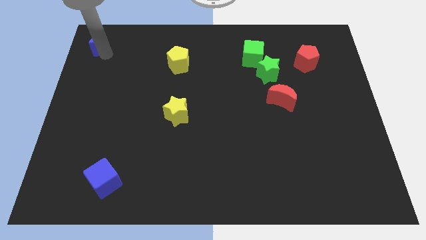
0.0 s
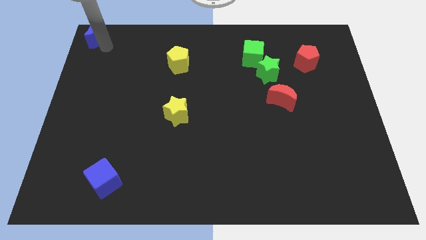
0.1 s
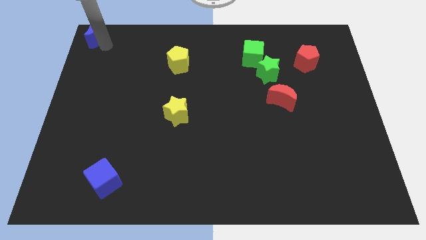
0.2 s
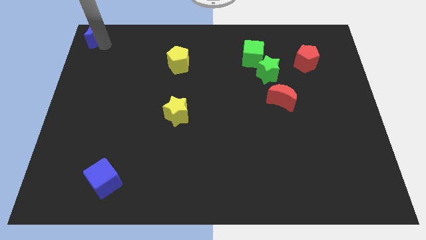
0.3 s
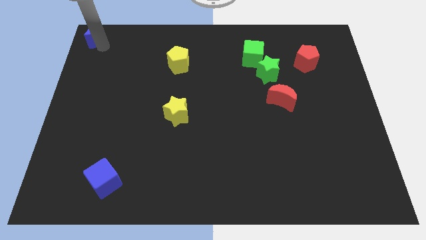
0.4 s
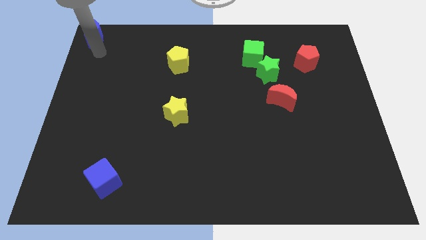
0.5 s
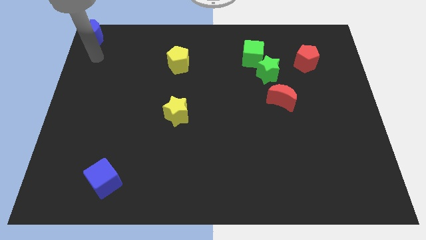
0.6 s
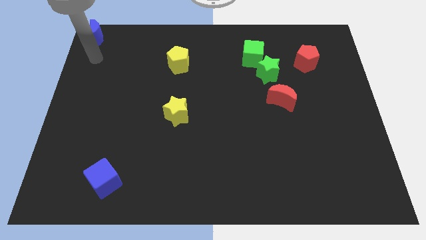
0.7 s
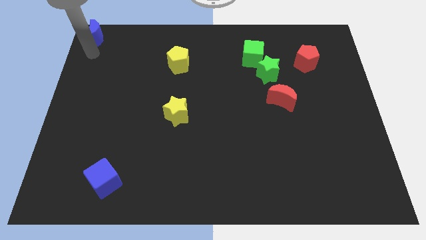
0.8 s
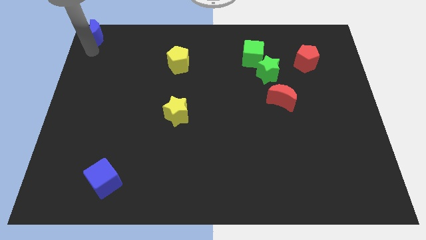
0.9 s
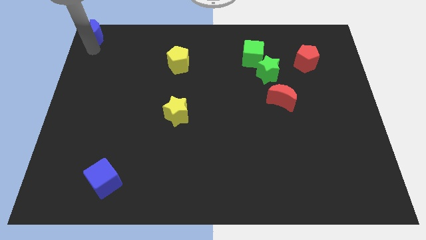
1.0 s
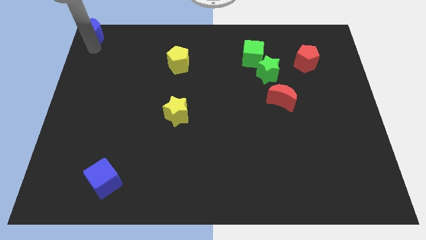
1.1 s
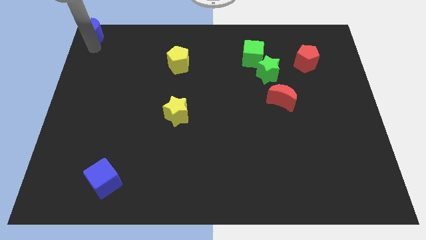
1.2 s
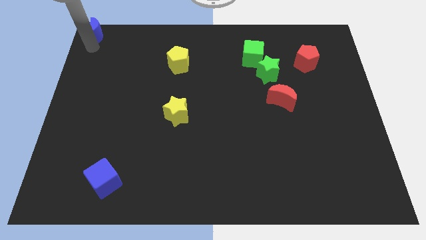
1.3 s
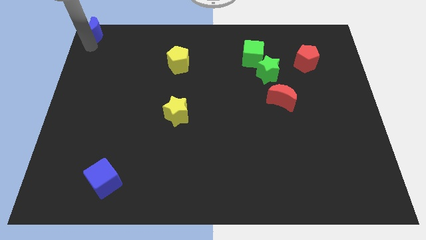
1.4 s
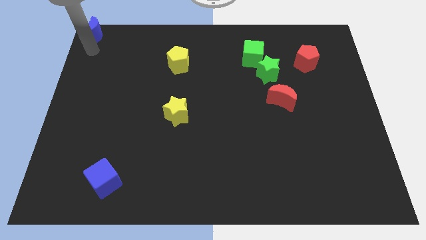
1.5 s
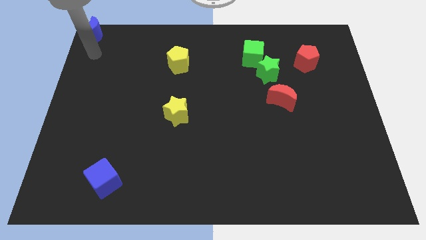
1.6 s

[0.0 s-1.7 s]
move the blue crescent to the top left corner of the board

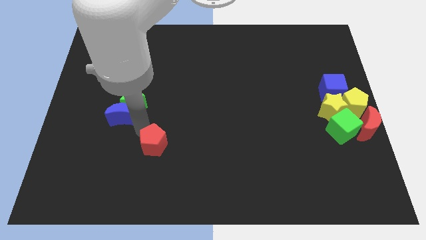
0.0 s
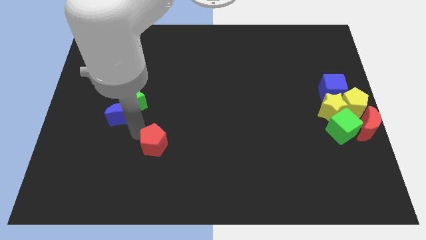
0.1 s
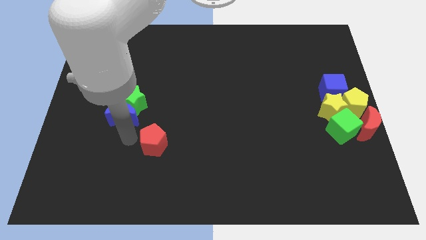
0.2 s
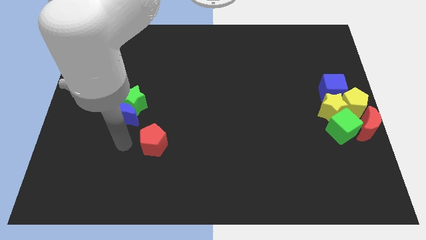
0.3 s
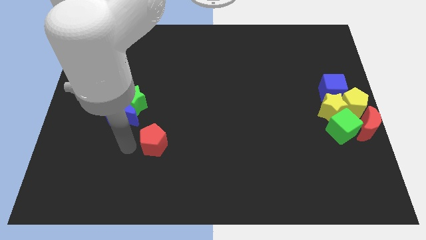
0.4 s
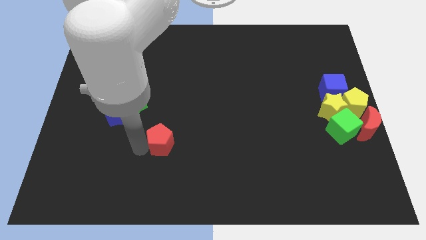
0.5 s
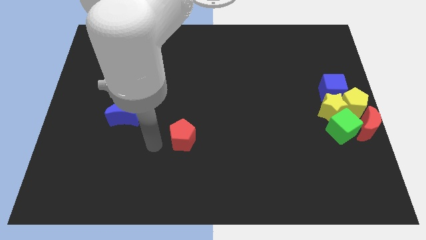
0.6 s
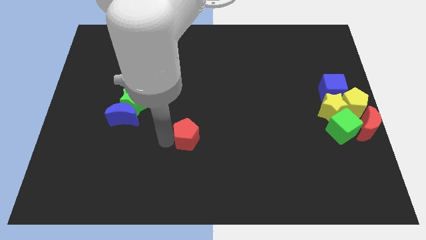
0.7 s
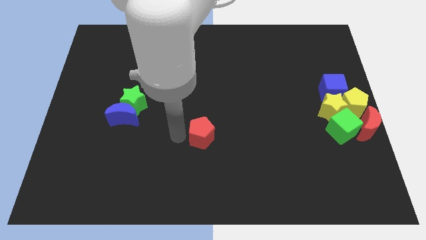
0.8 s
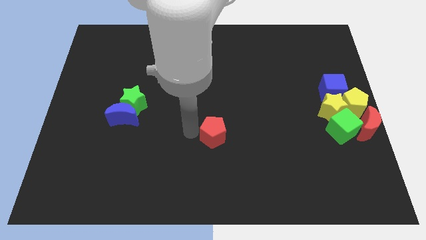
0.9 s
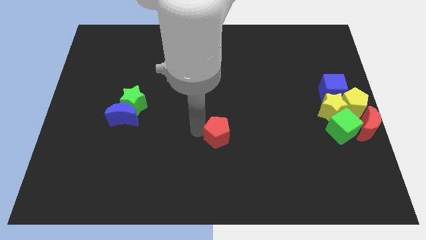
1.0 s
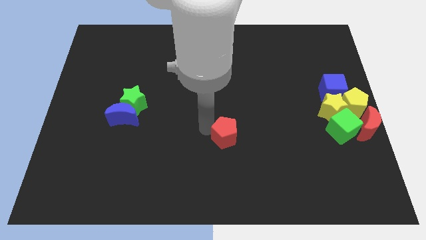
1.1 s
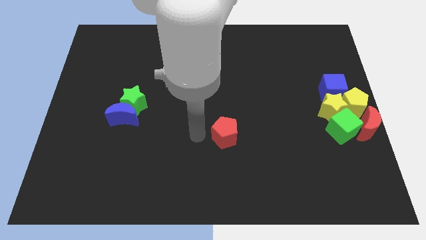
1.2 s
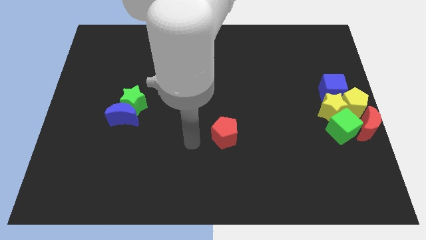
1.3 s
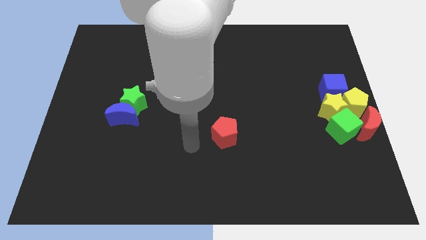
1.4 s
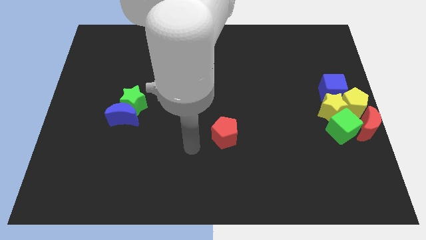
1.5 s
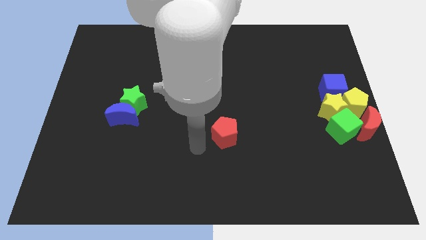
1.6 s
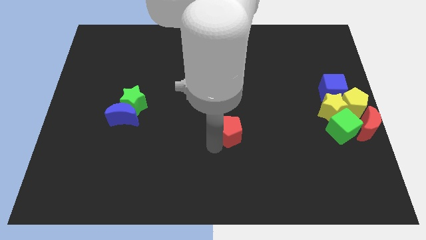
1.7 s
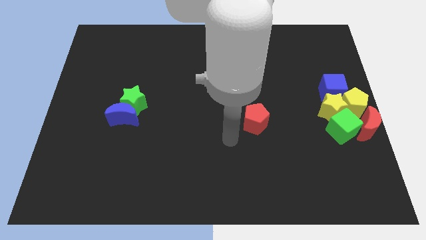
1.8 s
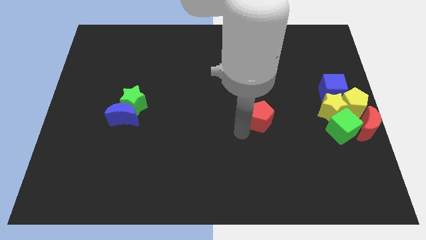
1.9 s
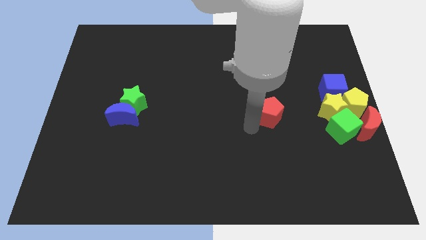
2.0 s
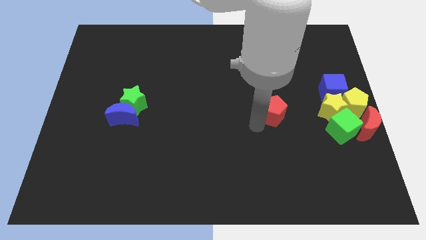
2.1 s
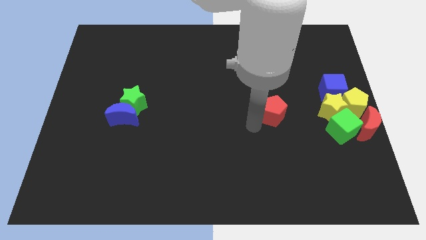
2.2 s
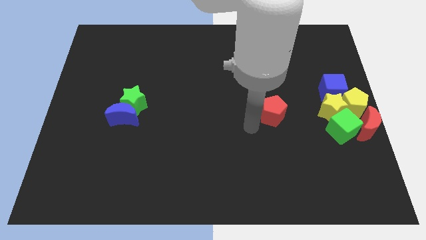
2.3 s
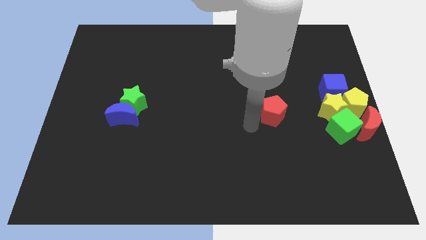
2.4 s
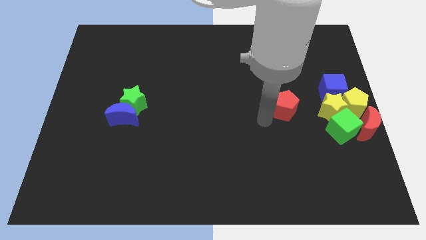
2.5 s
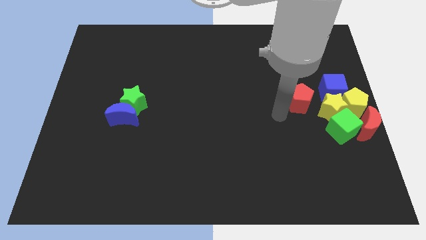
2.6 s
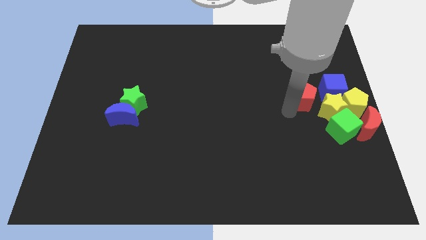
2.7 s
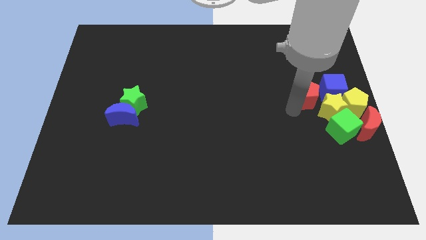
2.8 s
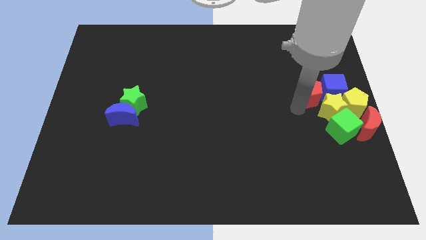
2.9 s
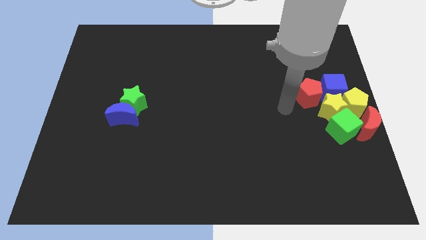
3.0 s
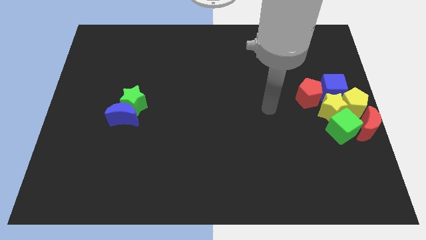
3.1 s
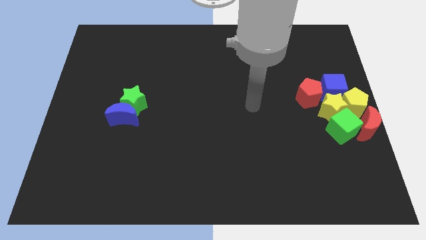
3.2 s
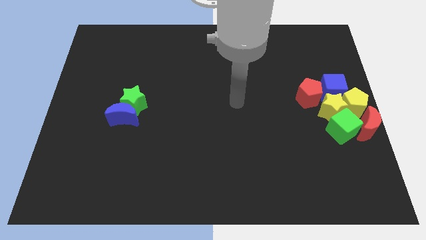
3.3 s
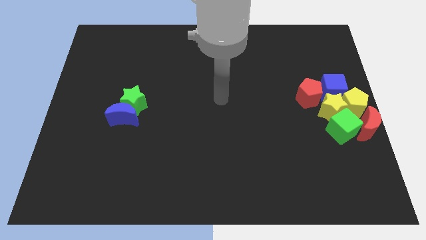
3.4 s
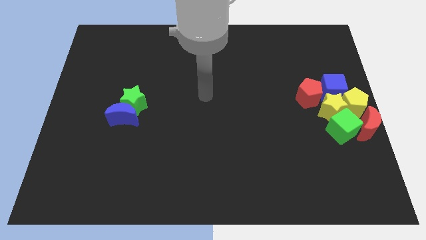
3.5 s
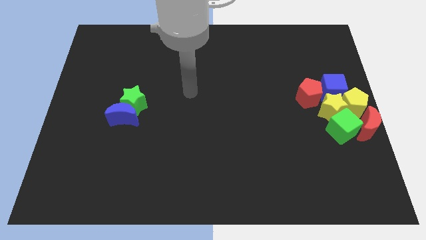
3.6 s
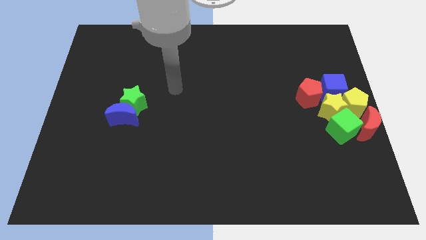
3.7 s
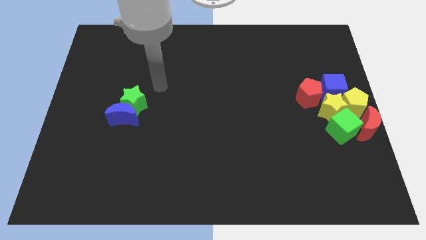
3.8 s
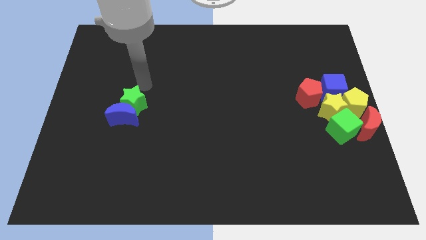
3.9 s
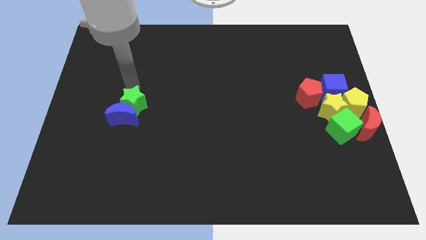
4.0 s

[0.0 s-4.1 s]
place the red pentagon to the left of the blue cube

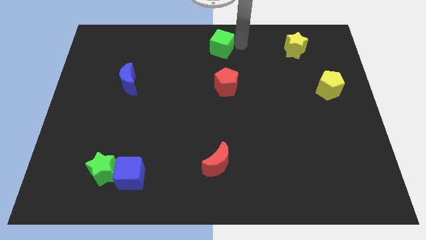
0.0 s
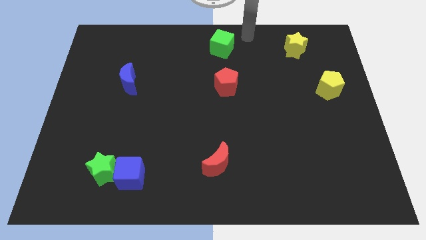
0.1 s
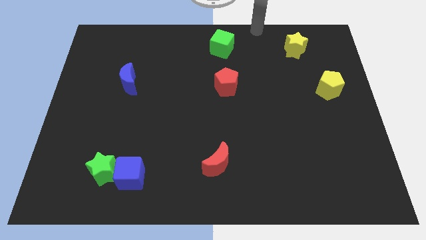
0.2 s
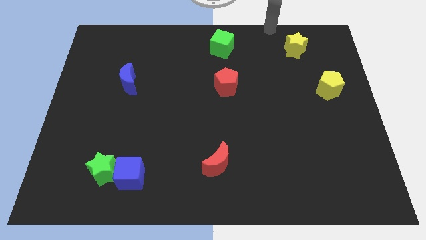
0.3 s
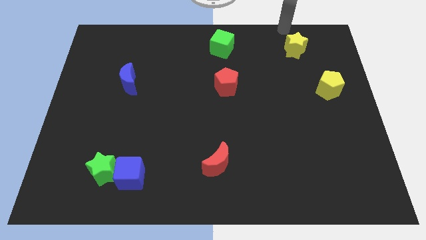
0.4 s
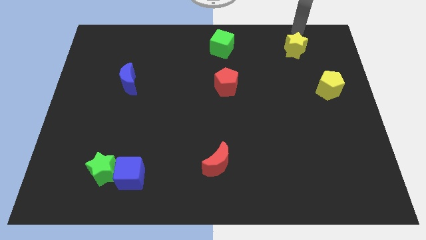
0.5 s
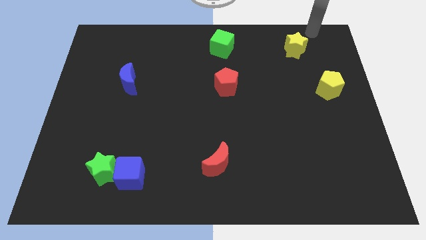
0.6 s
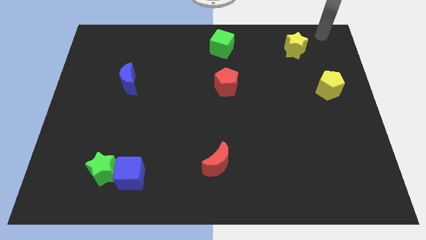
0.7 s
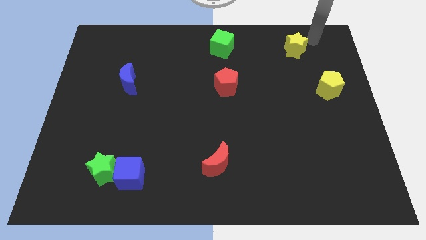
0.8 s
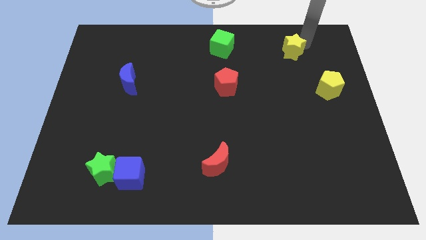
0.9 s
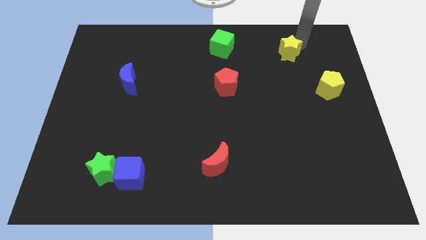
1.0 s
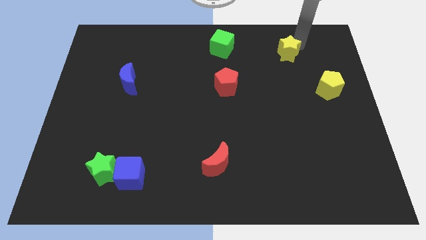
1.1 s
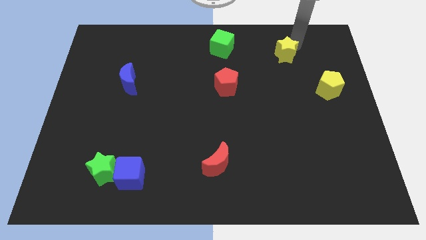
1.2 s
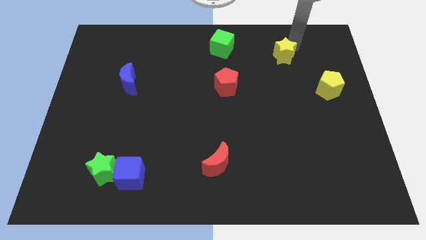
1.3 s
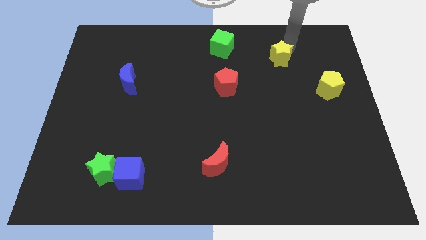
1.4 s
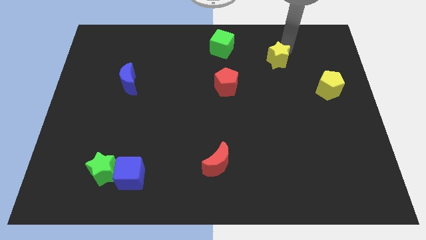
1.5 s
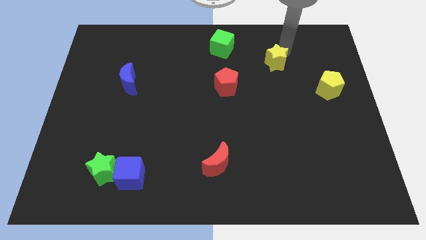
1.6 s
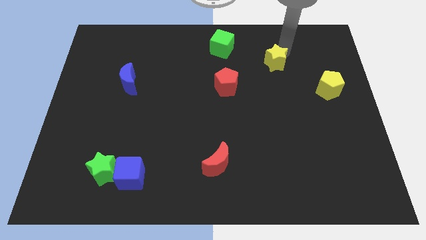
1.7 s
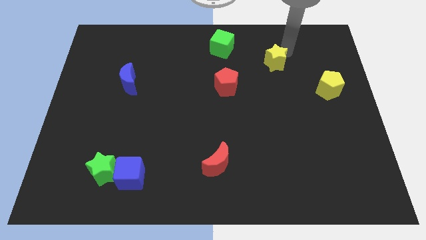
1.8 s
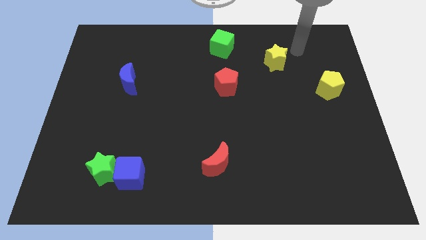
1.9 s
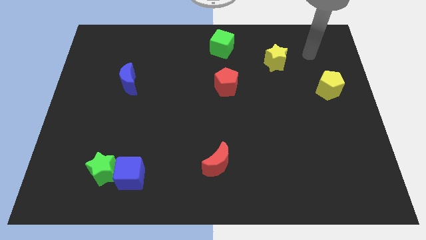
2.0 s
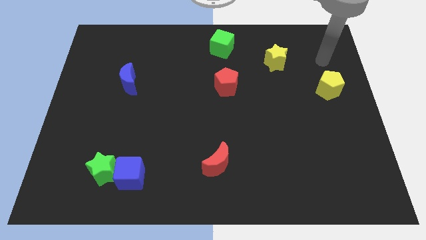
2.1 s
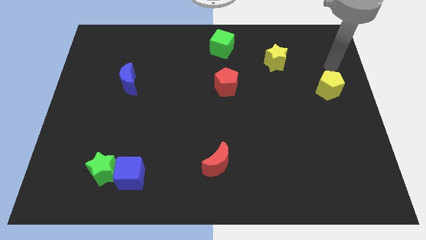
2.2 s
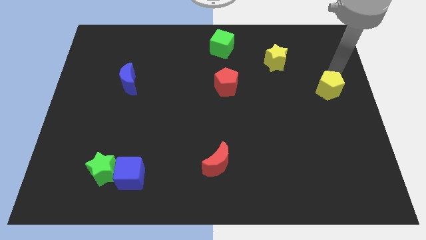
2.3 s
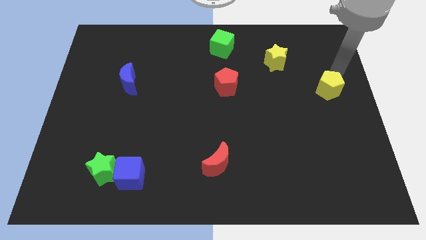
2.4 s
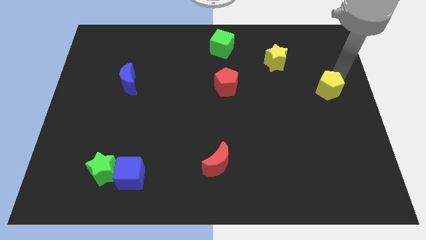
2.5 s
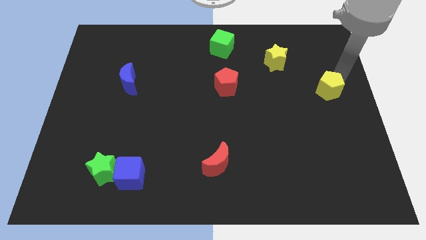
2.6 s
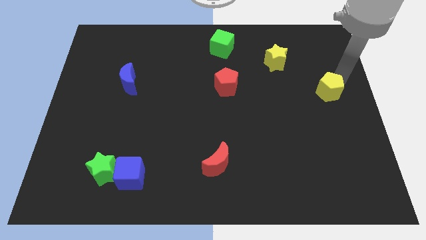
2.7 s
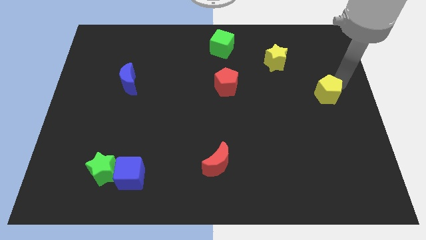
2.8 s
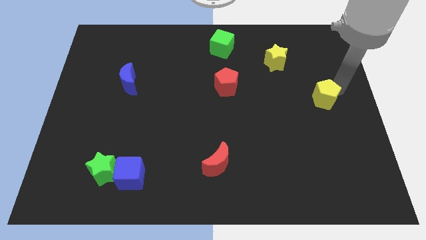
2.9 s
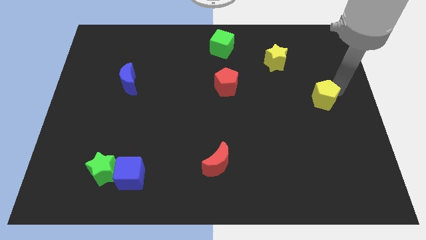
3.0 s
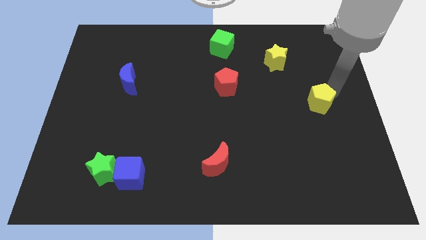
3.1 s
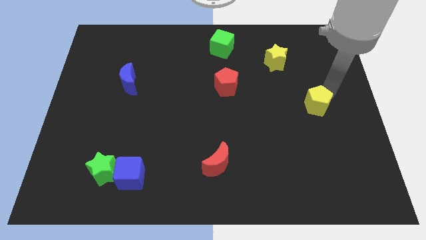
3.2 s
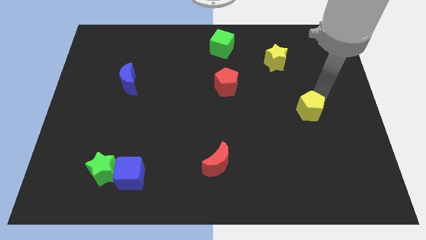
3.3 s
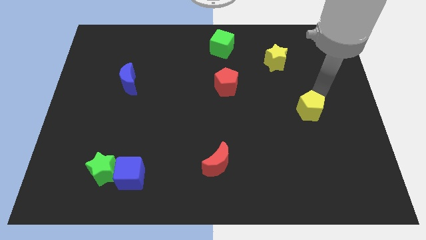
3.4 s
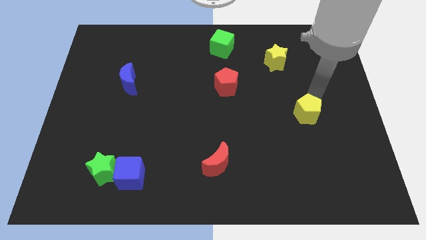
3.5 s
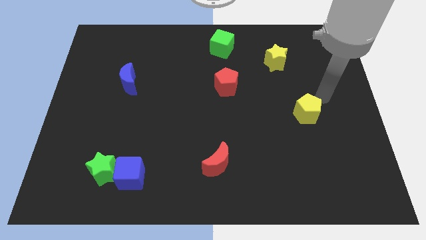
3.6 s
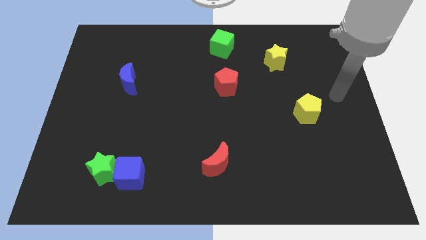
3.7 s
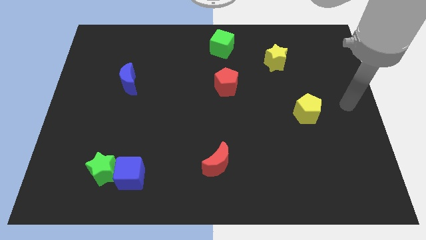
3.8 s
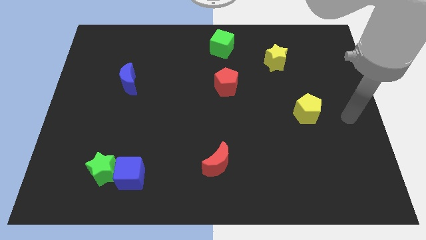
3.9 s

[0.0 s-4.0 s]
slide yellow blocks towards the center of the board
